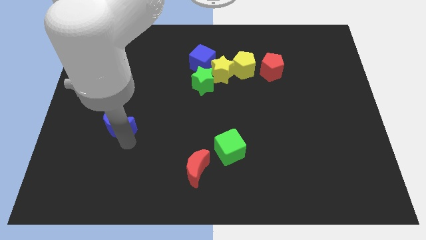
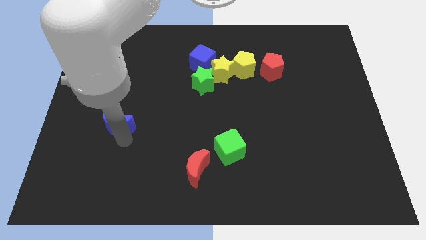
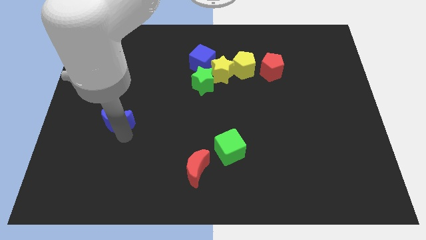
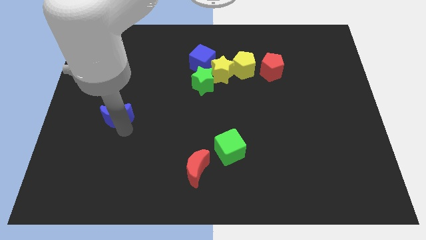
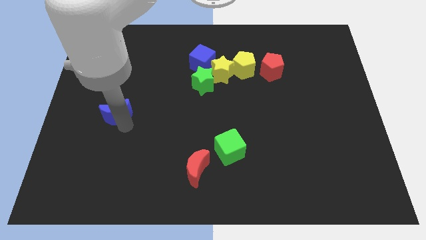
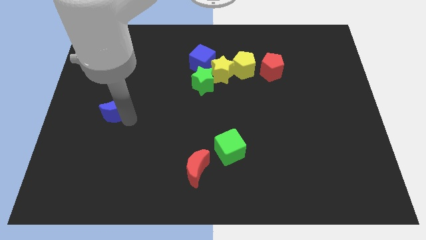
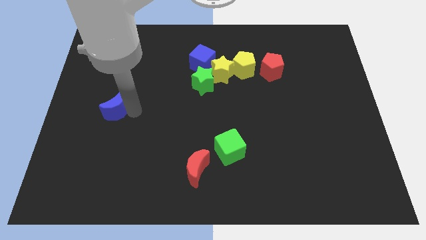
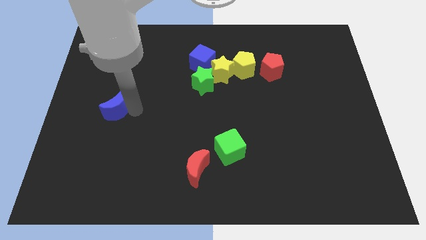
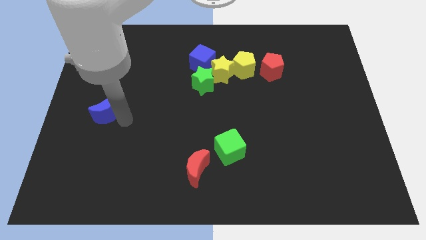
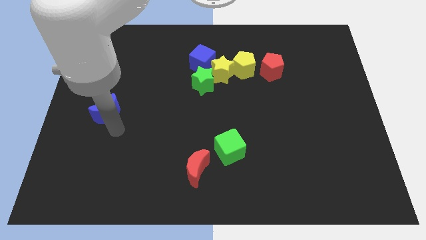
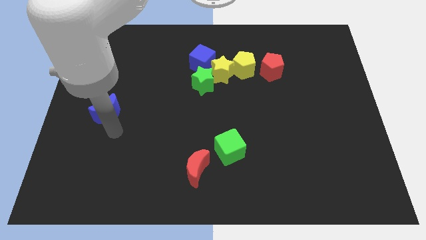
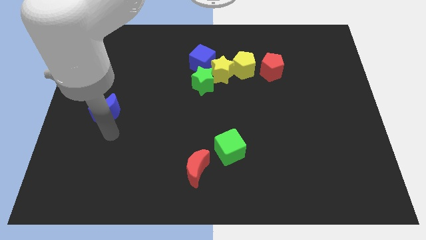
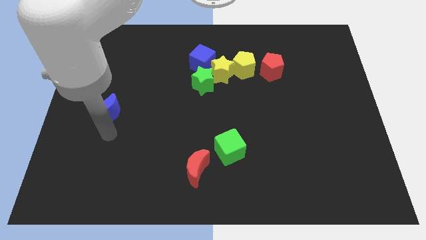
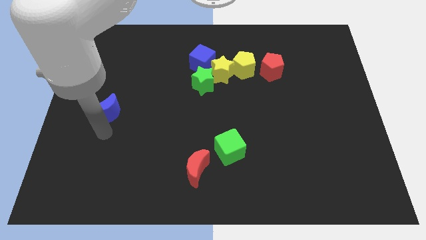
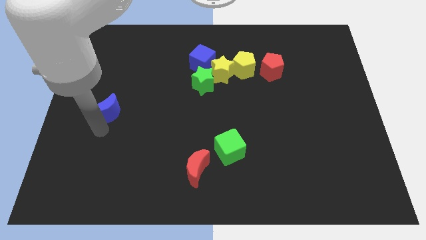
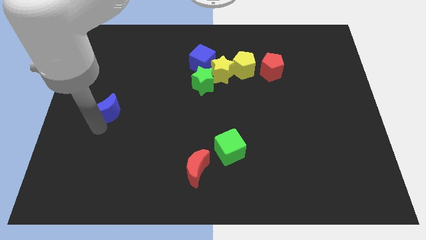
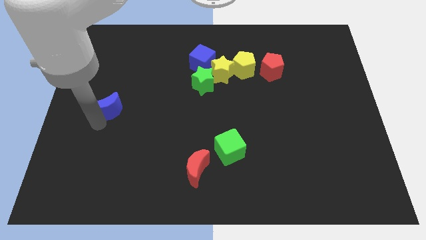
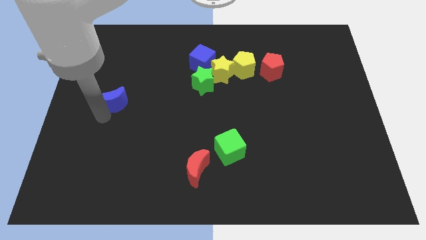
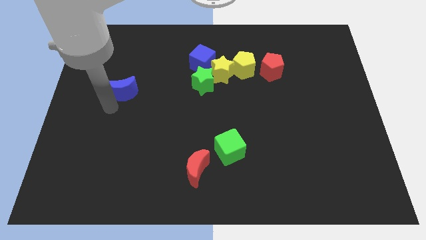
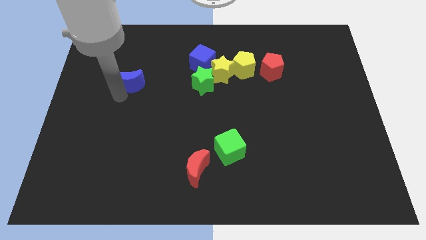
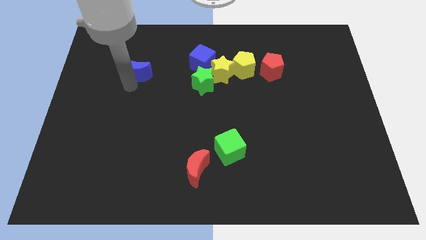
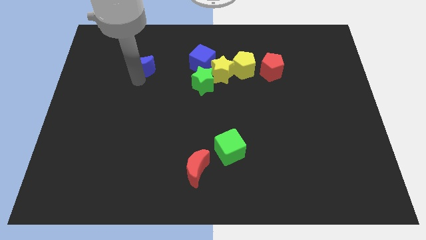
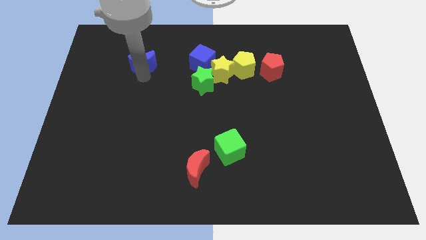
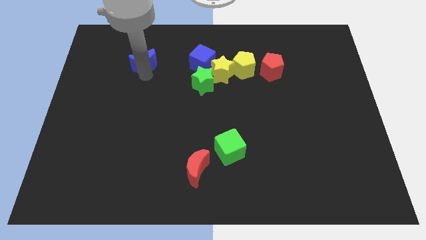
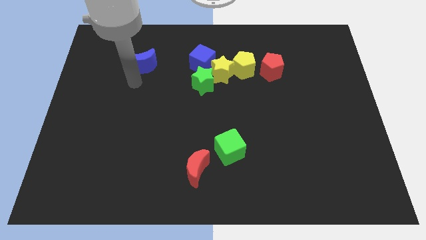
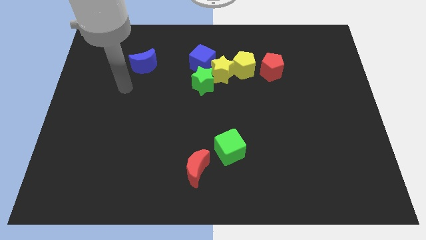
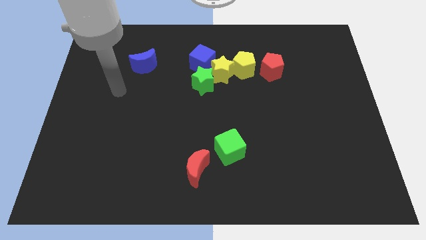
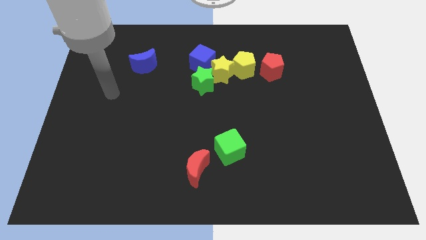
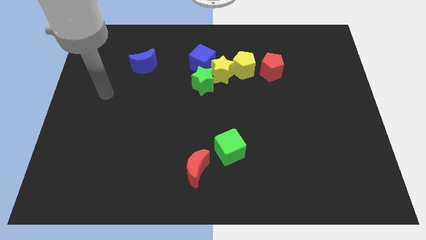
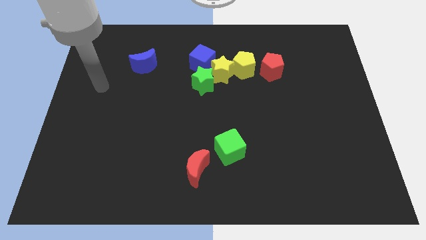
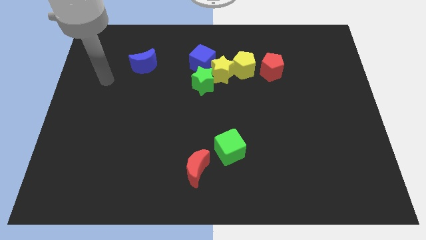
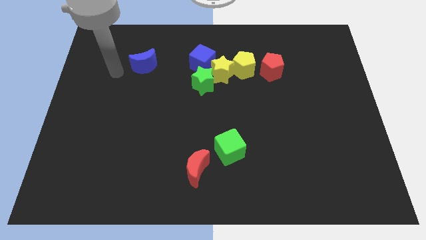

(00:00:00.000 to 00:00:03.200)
place the blue crescent horizontally to the left side of the blue cube

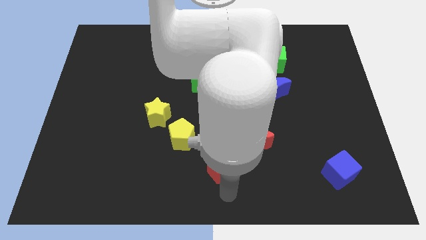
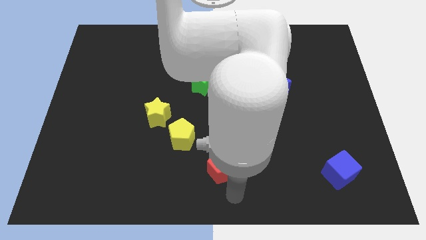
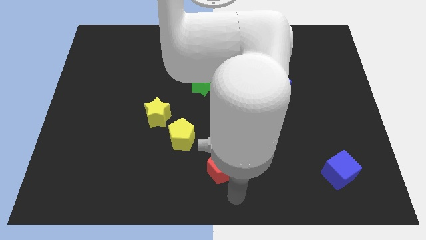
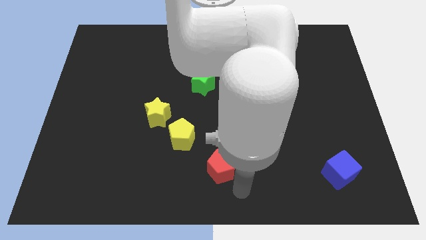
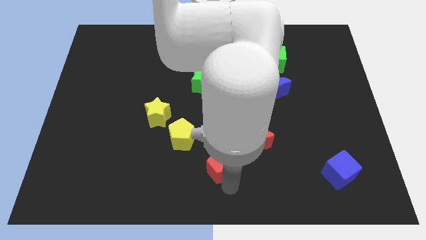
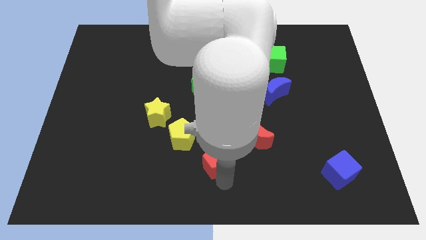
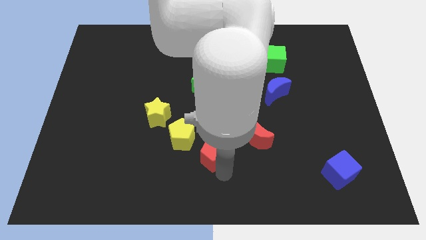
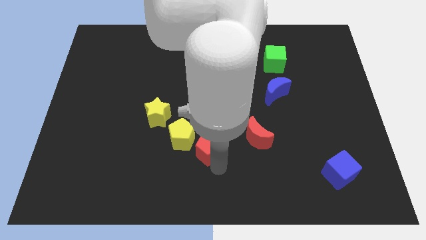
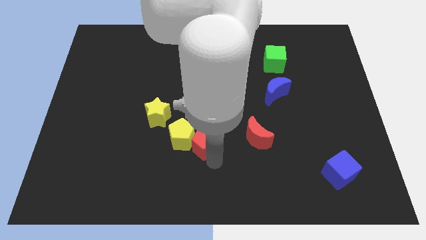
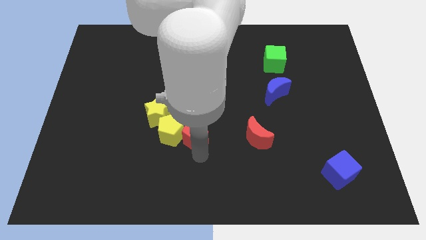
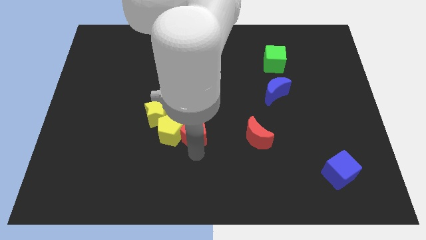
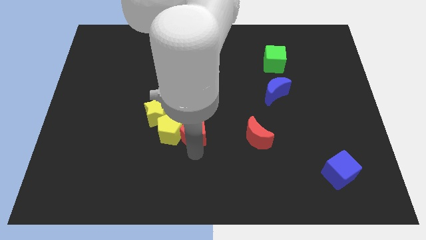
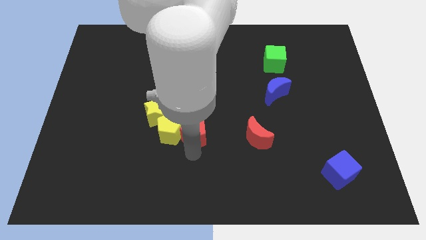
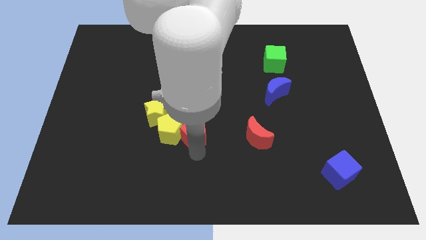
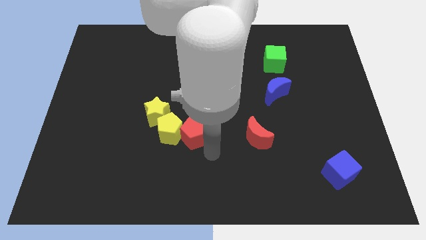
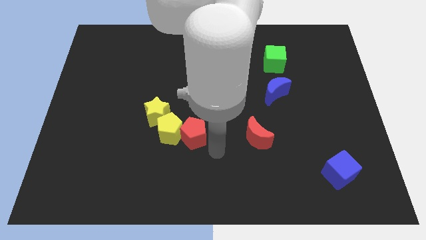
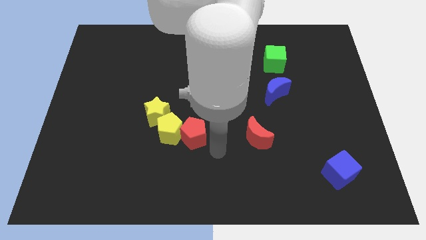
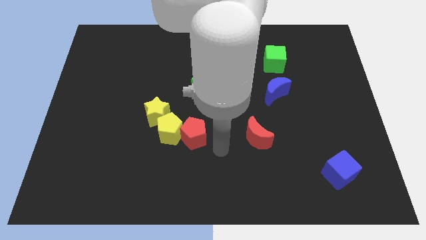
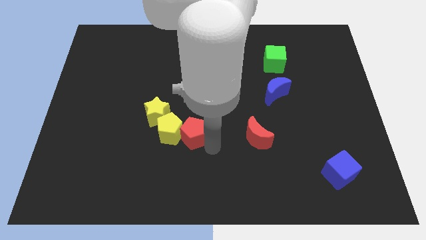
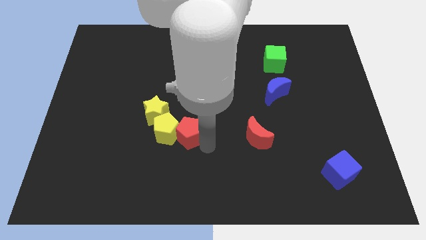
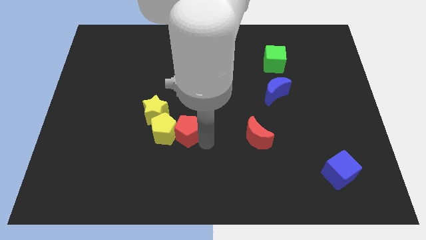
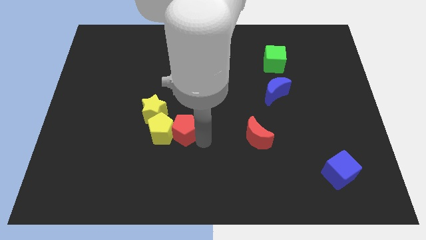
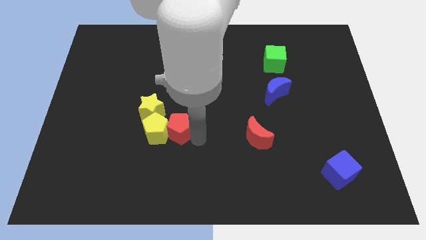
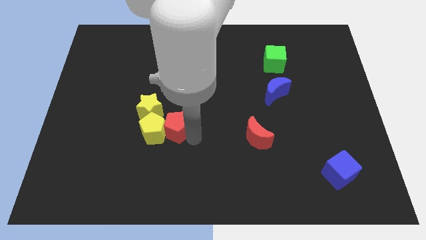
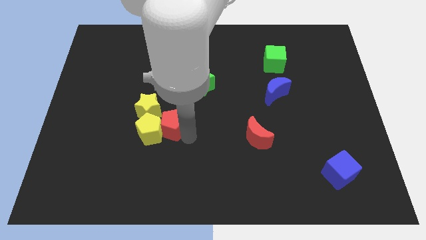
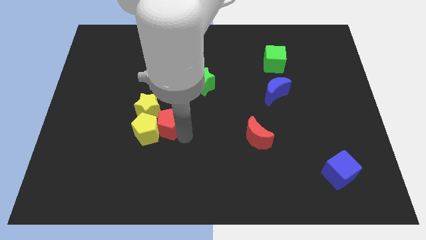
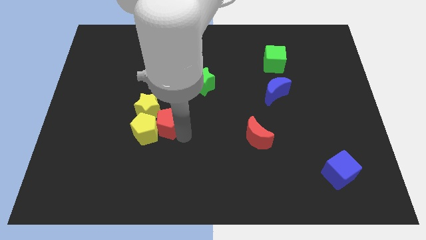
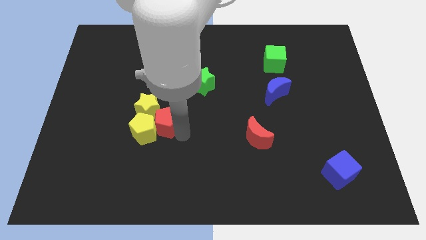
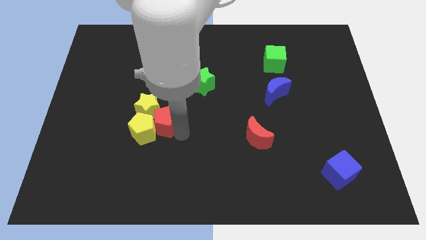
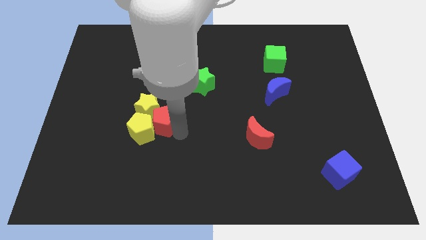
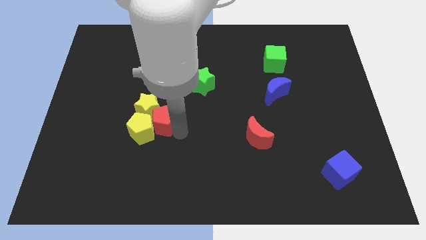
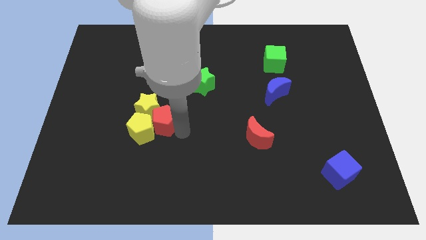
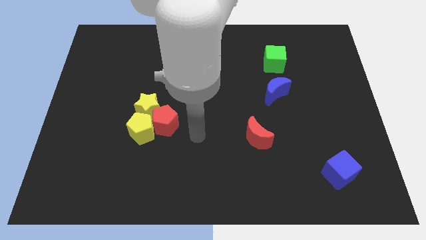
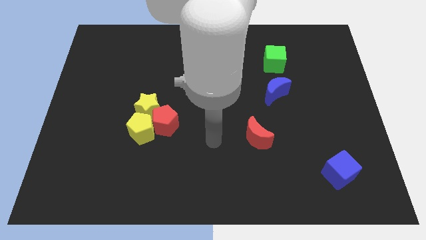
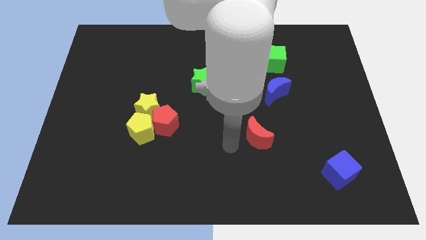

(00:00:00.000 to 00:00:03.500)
push the red pentagon to the right of the yellow star

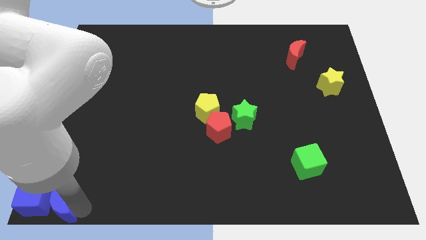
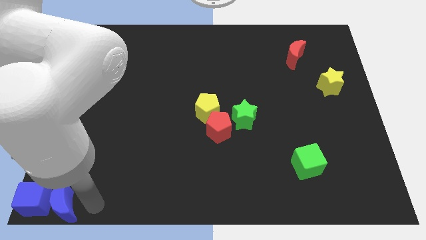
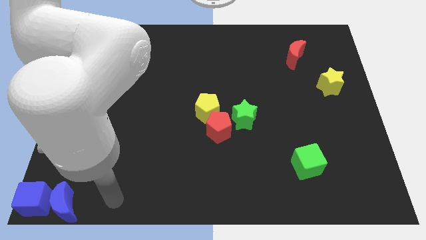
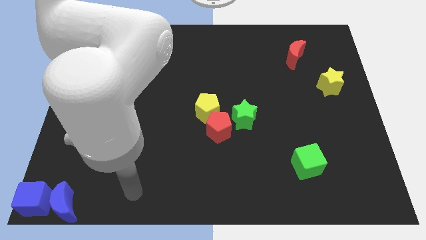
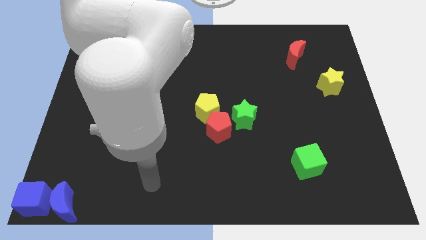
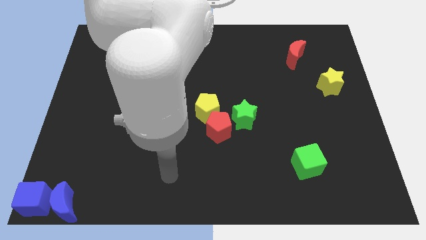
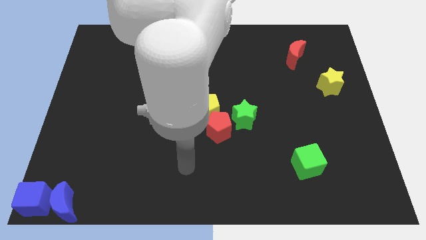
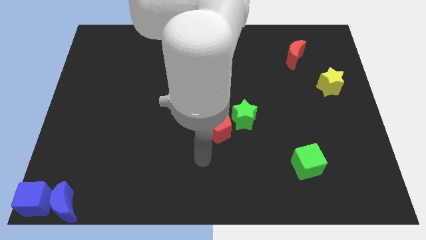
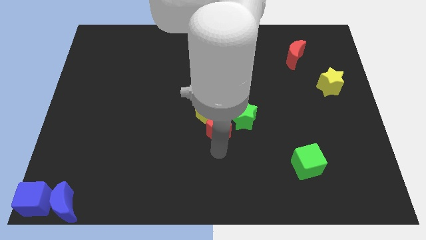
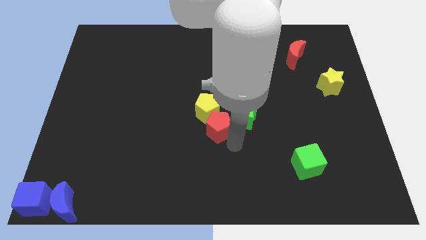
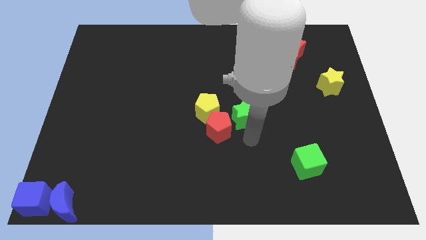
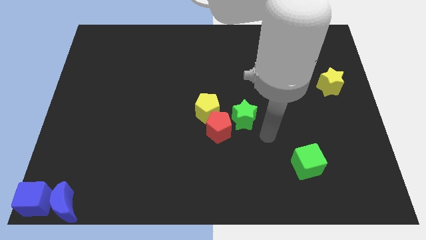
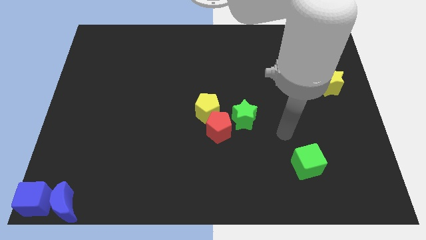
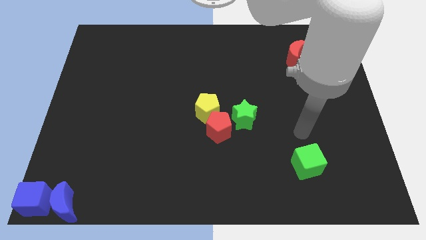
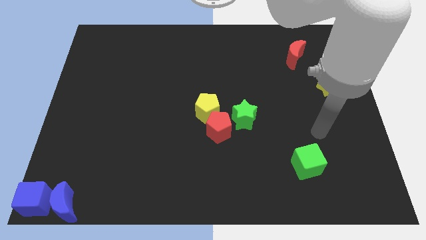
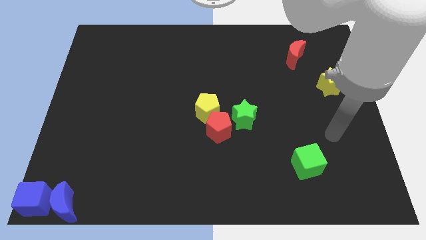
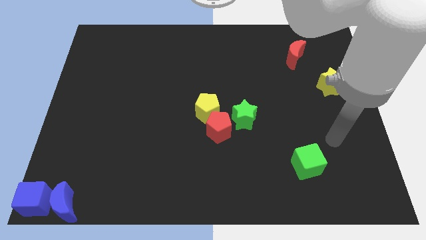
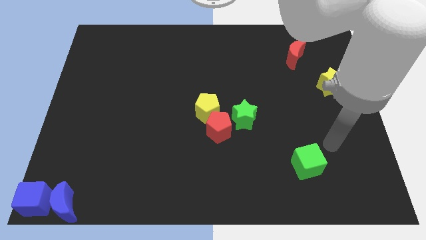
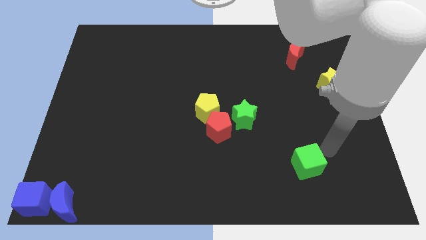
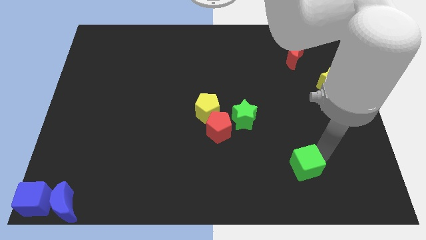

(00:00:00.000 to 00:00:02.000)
tap the right side of the green cube

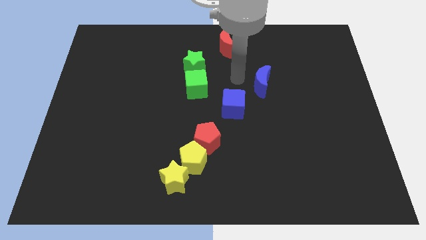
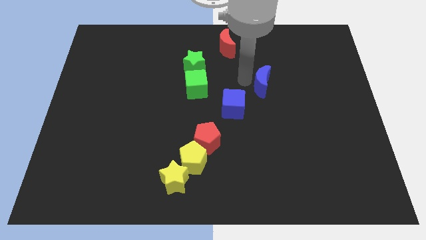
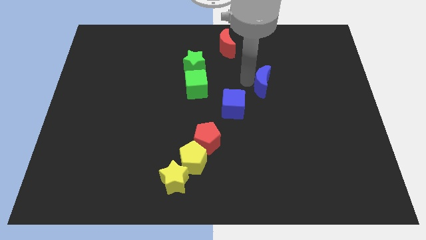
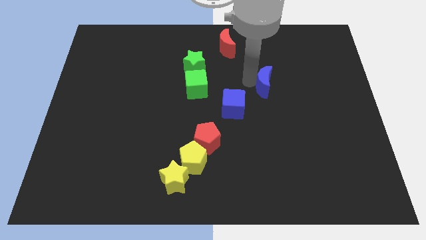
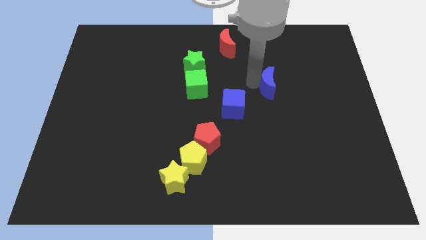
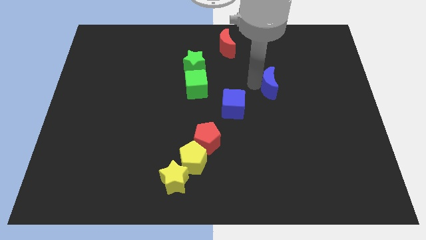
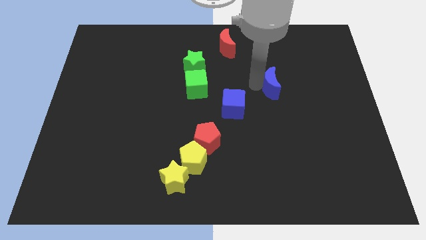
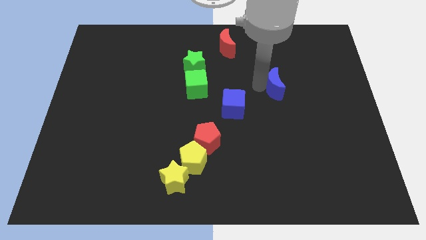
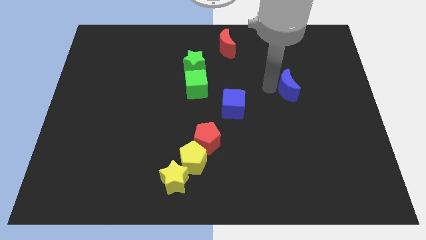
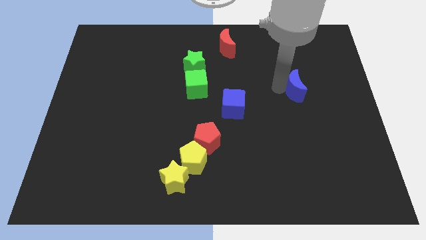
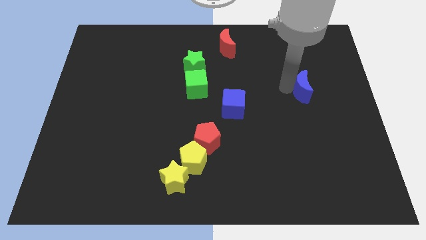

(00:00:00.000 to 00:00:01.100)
move blue moon slightly to the right
